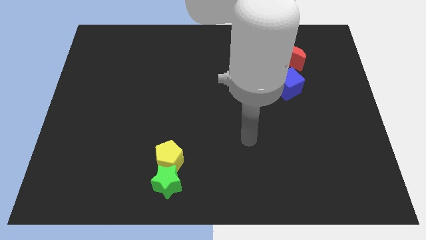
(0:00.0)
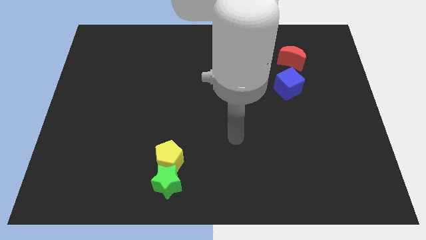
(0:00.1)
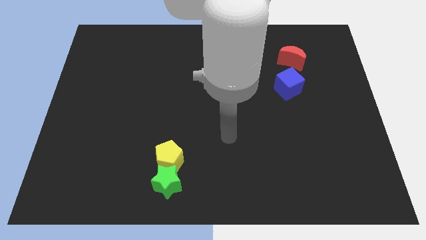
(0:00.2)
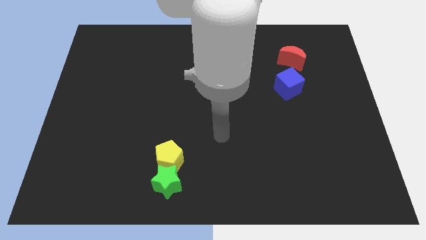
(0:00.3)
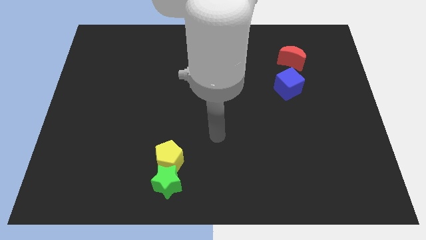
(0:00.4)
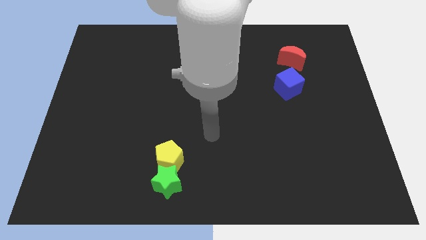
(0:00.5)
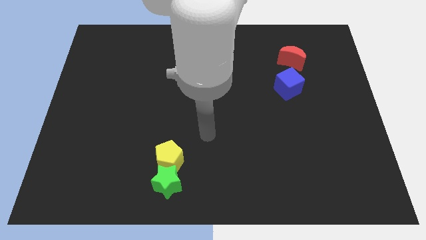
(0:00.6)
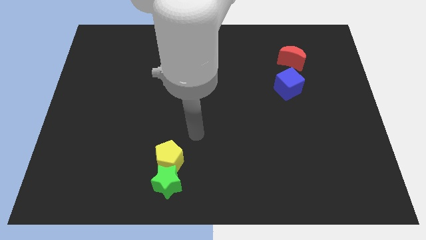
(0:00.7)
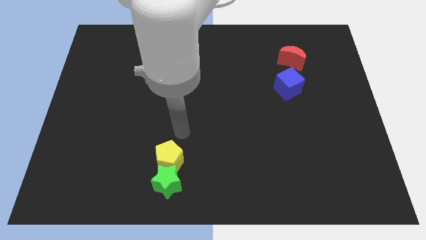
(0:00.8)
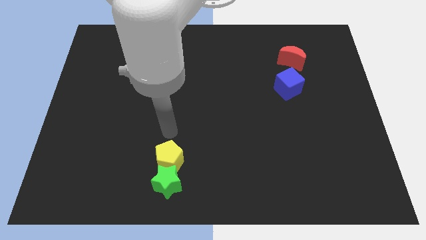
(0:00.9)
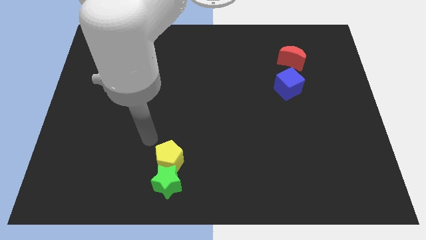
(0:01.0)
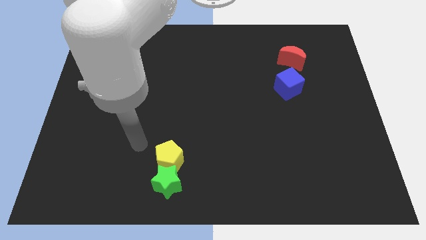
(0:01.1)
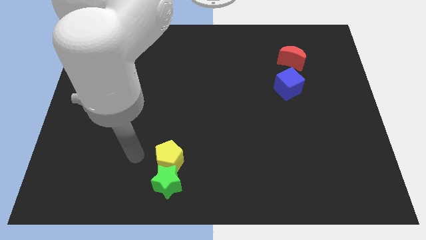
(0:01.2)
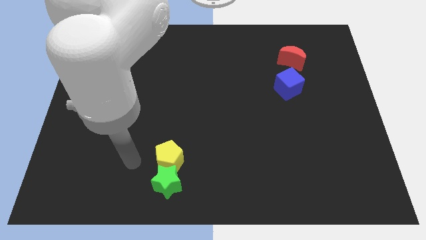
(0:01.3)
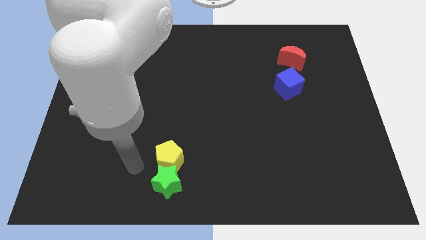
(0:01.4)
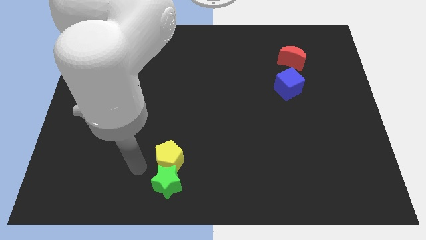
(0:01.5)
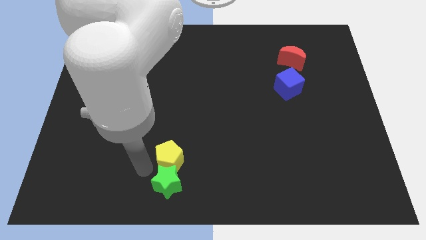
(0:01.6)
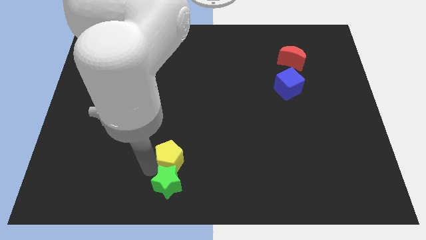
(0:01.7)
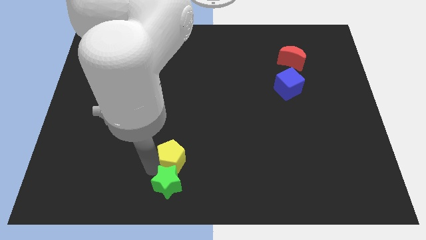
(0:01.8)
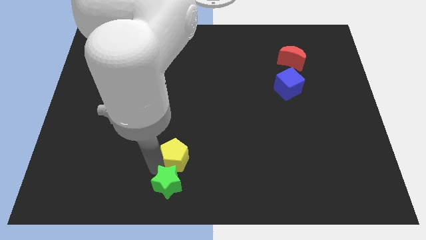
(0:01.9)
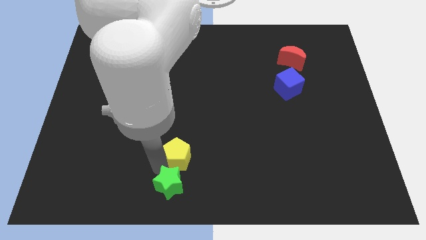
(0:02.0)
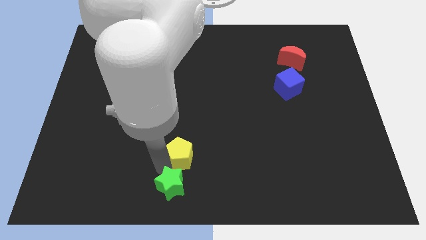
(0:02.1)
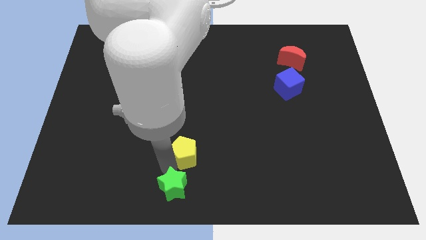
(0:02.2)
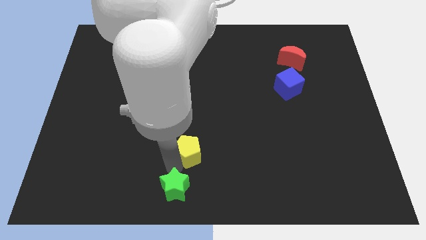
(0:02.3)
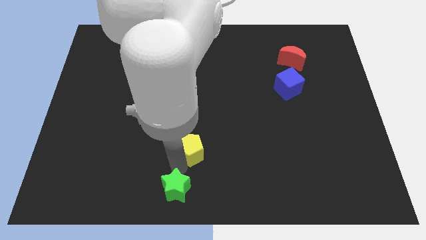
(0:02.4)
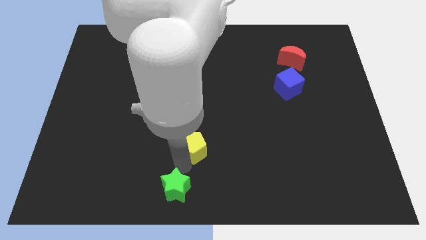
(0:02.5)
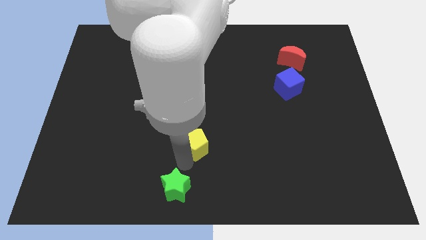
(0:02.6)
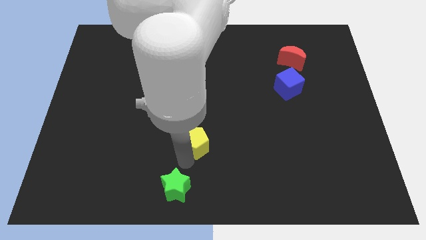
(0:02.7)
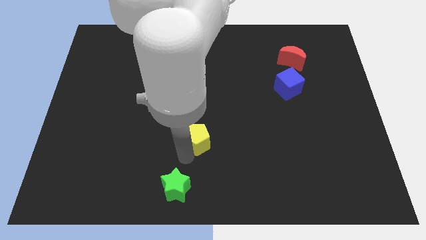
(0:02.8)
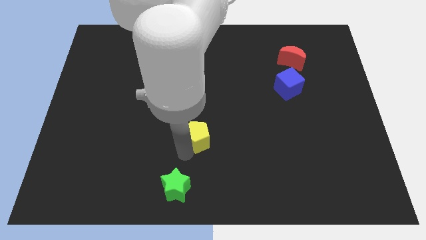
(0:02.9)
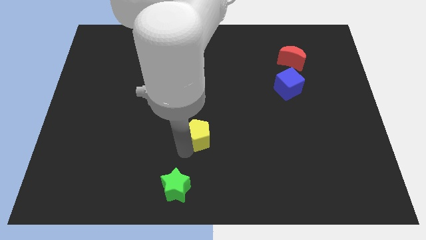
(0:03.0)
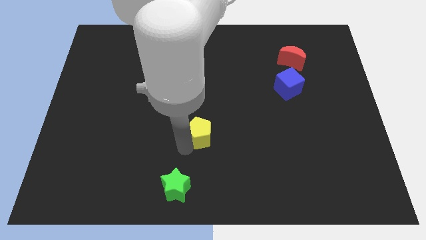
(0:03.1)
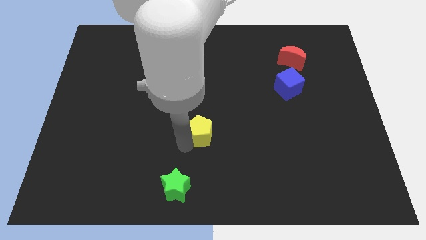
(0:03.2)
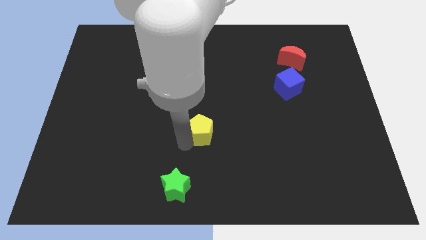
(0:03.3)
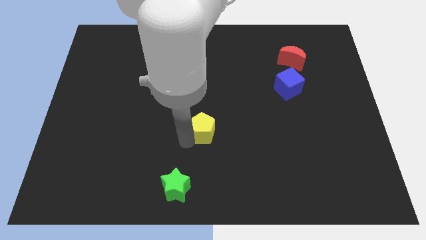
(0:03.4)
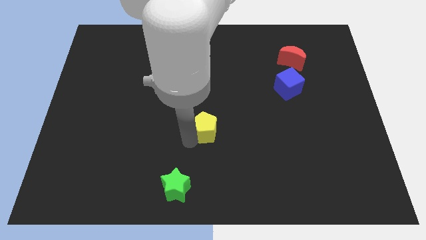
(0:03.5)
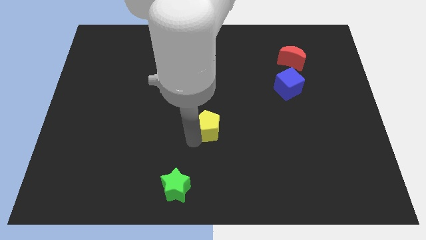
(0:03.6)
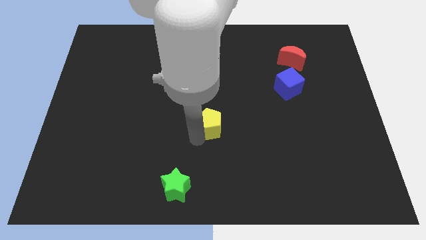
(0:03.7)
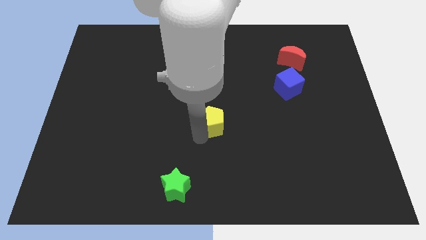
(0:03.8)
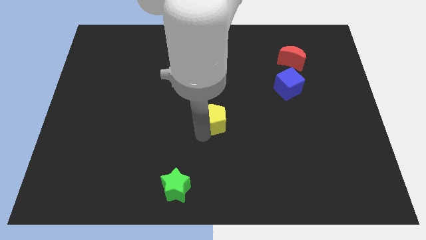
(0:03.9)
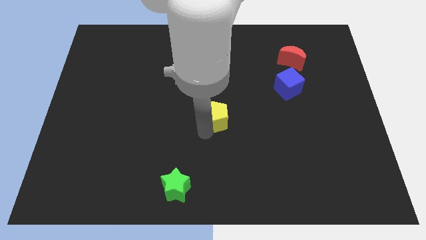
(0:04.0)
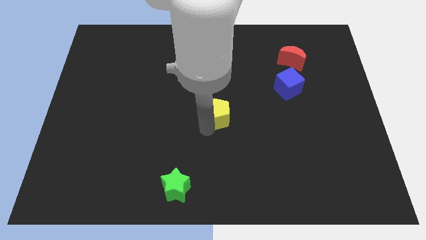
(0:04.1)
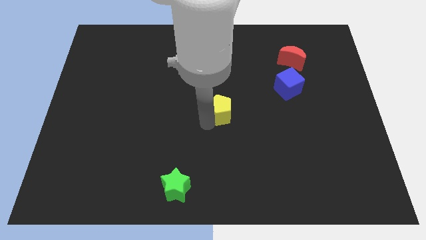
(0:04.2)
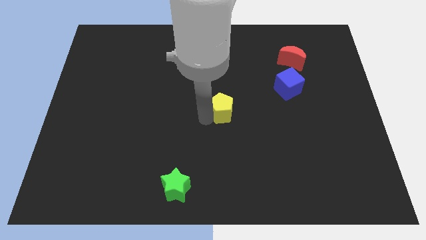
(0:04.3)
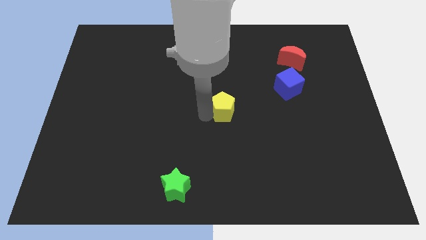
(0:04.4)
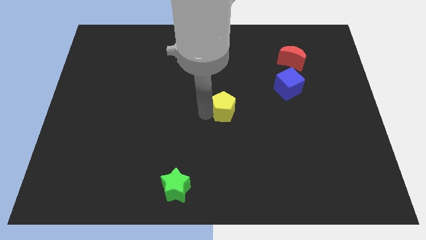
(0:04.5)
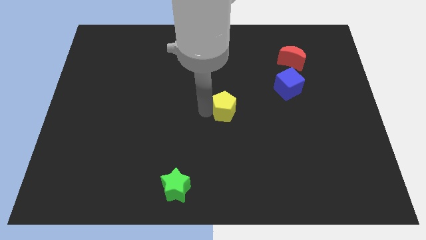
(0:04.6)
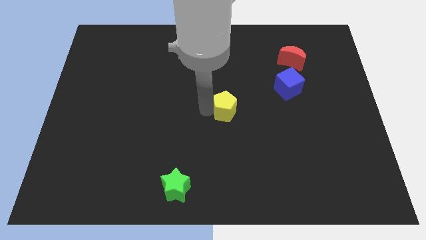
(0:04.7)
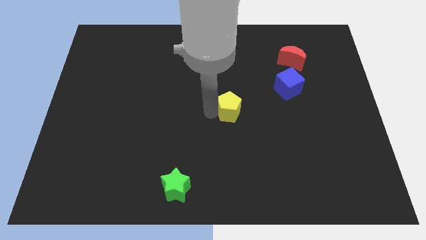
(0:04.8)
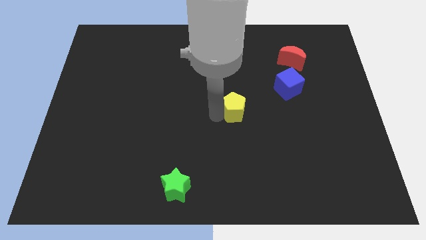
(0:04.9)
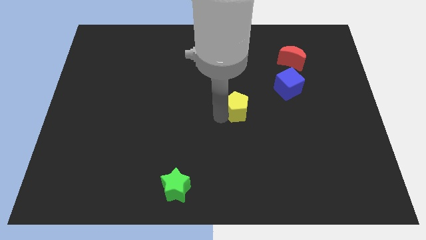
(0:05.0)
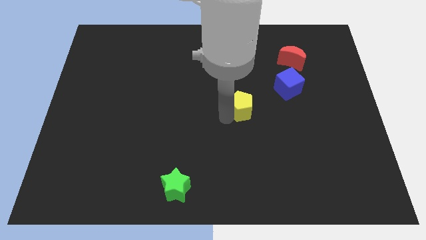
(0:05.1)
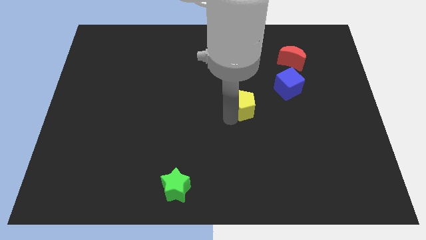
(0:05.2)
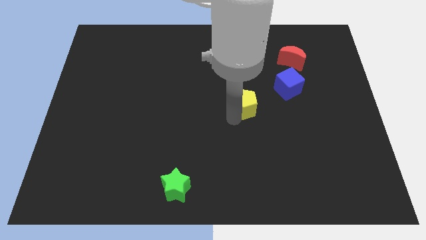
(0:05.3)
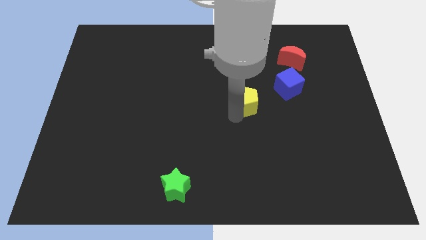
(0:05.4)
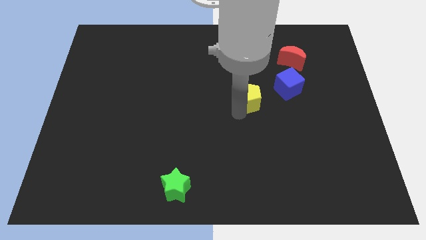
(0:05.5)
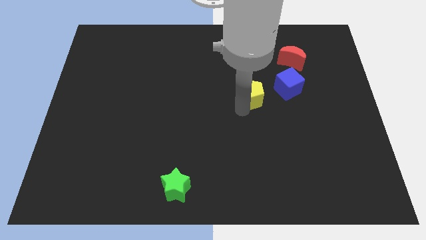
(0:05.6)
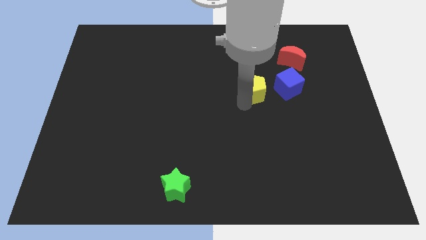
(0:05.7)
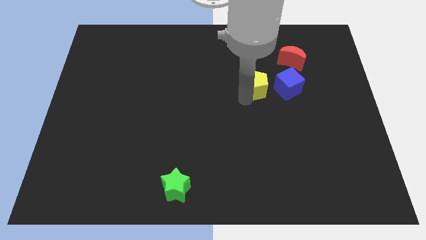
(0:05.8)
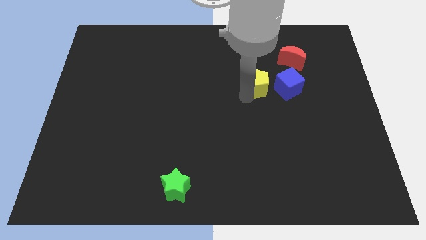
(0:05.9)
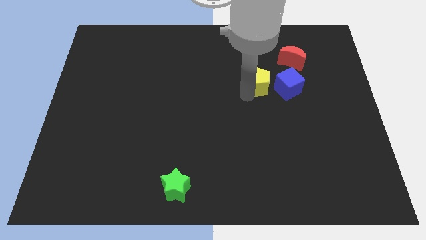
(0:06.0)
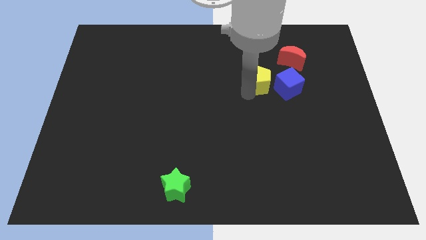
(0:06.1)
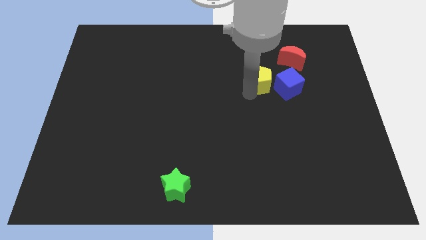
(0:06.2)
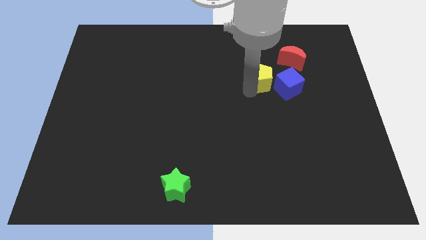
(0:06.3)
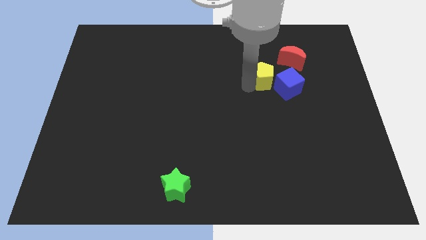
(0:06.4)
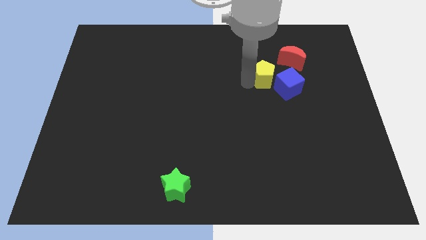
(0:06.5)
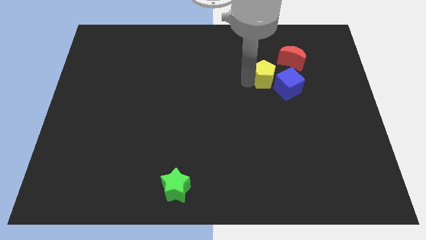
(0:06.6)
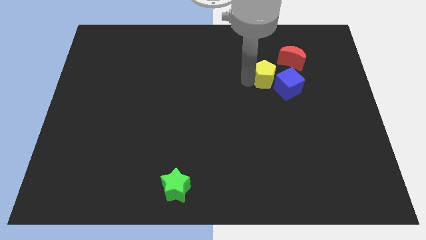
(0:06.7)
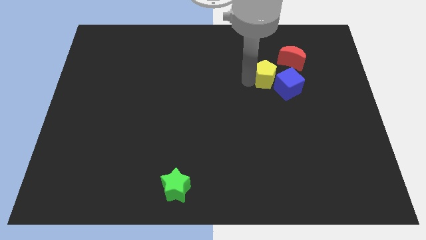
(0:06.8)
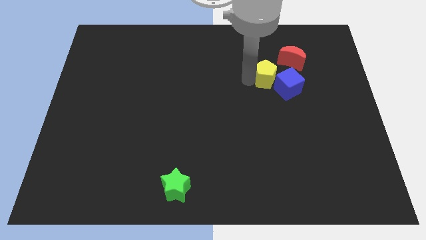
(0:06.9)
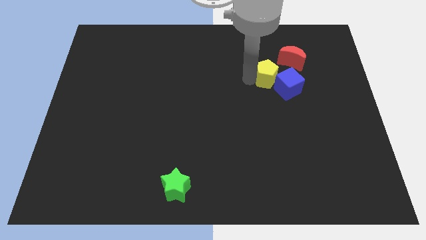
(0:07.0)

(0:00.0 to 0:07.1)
move the pentagon close to the cube

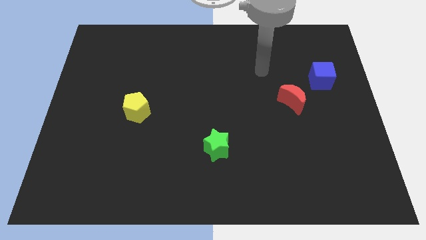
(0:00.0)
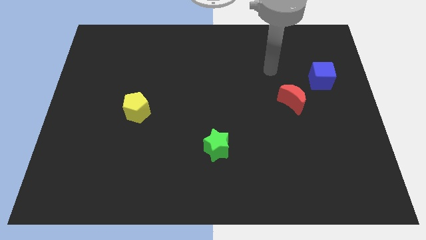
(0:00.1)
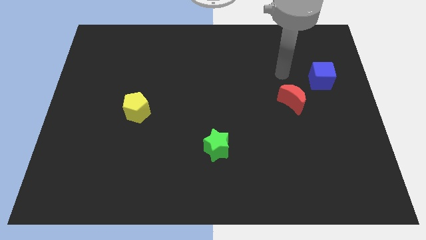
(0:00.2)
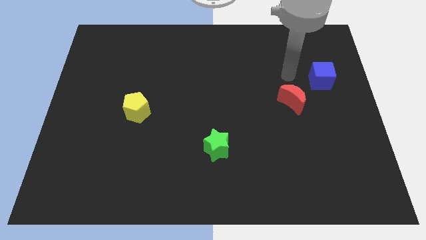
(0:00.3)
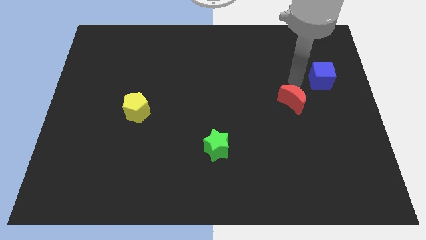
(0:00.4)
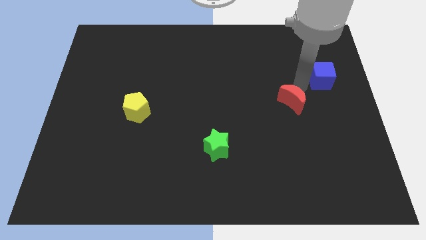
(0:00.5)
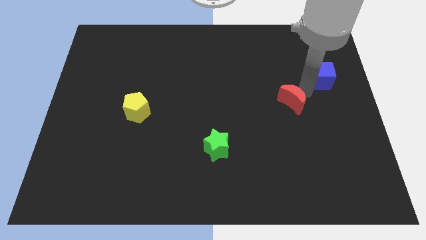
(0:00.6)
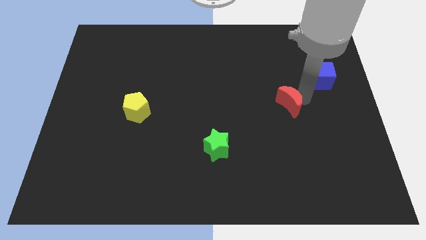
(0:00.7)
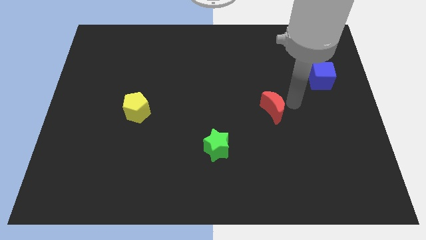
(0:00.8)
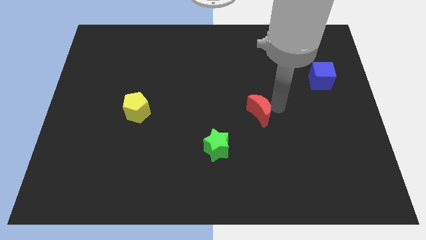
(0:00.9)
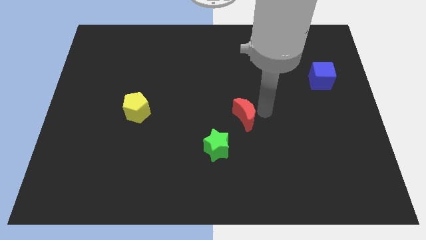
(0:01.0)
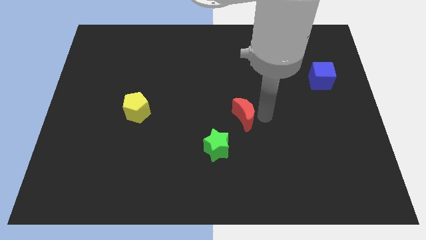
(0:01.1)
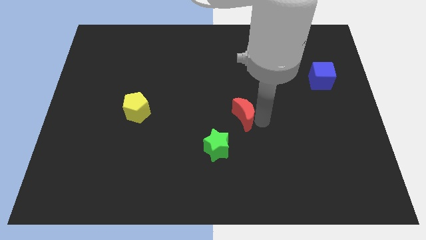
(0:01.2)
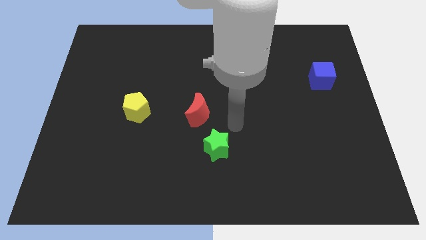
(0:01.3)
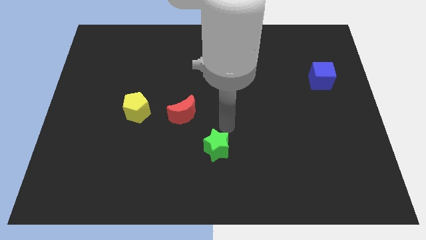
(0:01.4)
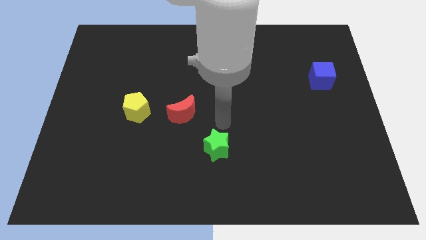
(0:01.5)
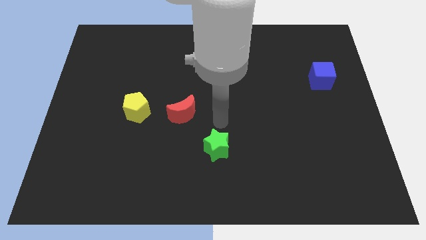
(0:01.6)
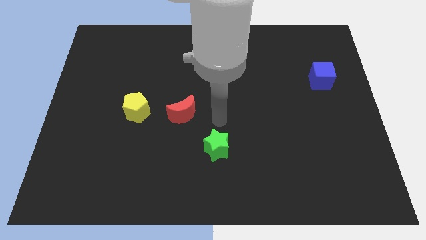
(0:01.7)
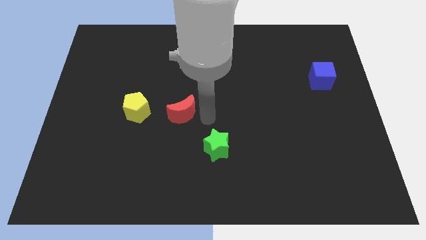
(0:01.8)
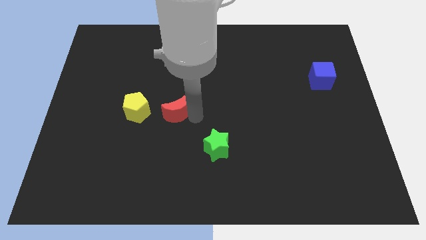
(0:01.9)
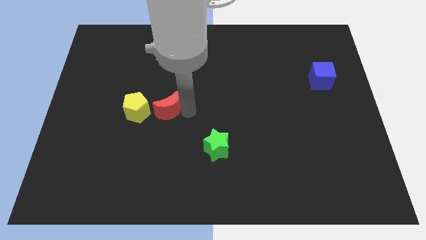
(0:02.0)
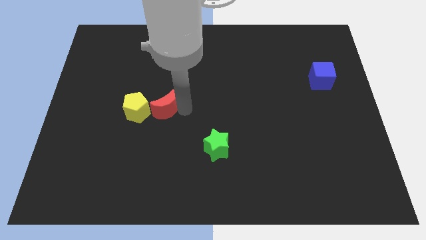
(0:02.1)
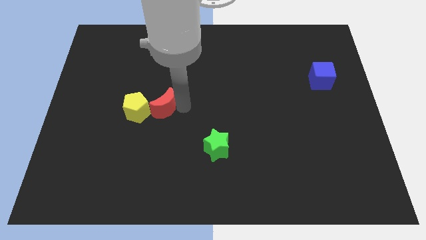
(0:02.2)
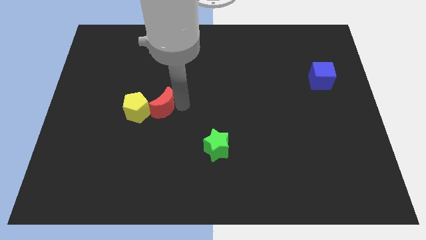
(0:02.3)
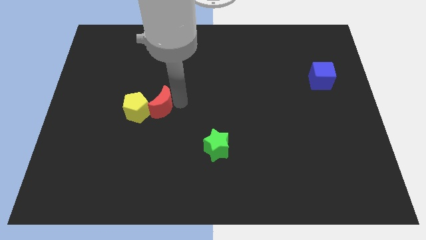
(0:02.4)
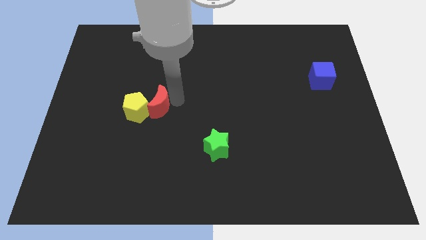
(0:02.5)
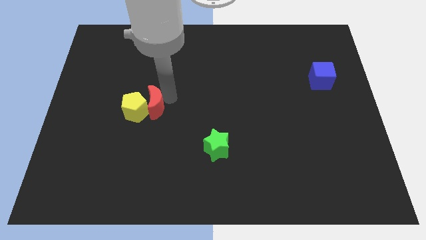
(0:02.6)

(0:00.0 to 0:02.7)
push the red block close to the yellow pentagon
